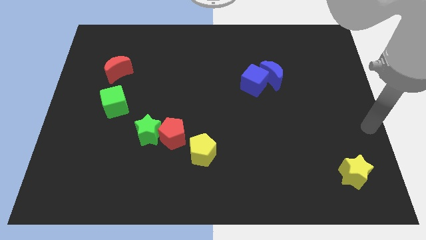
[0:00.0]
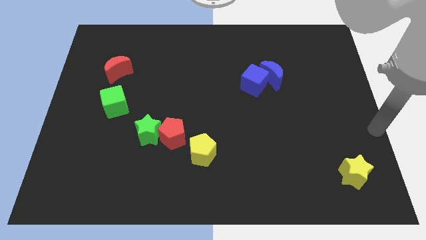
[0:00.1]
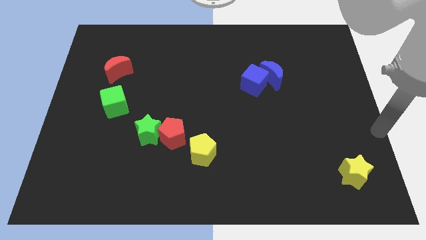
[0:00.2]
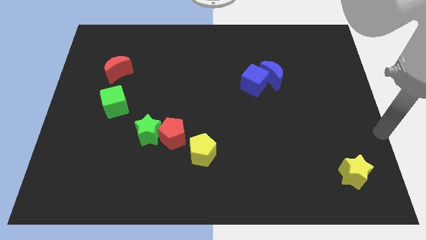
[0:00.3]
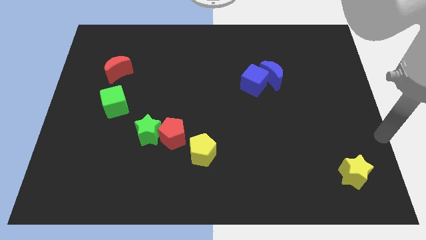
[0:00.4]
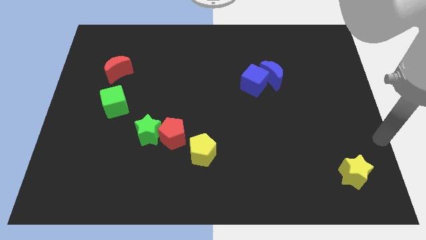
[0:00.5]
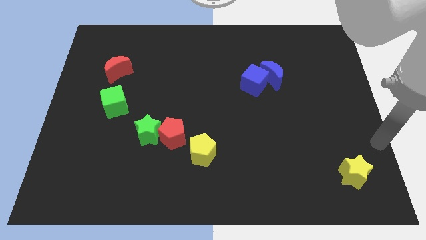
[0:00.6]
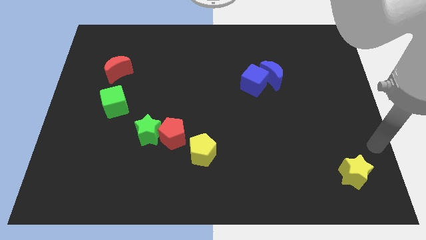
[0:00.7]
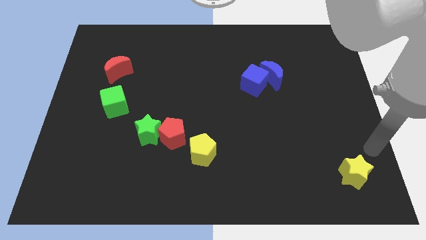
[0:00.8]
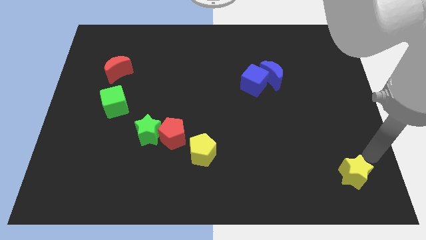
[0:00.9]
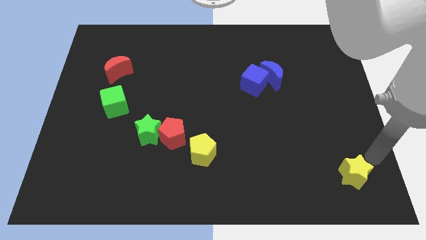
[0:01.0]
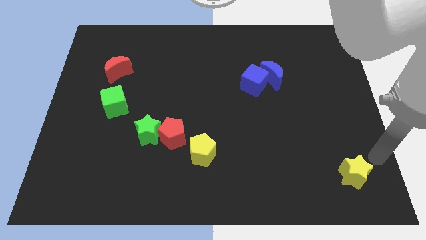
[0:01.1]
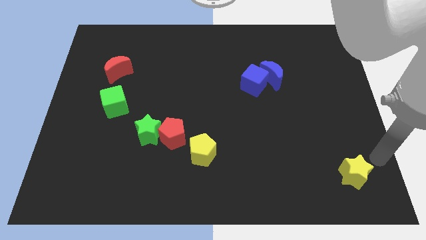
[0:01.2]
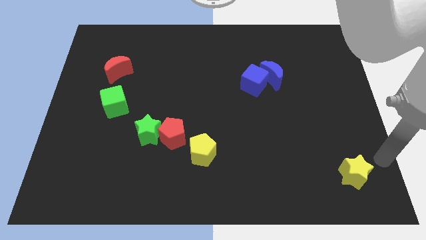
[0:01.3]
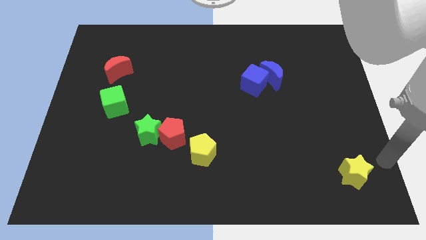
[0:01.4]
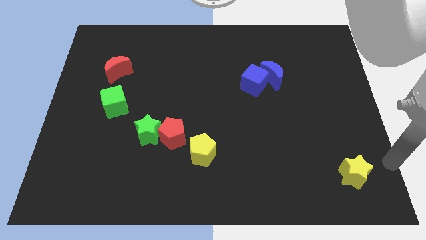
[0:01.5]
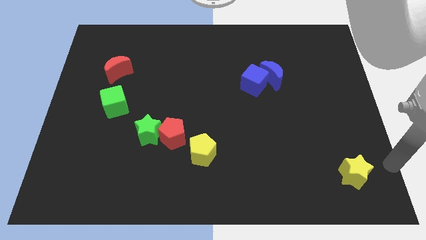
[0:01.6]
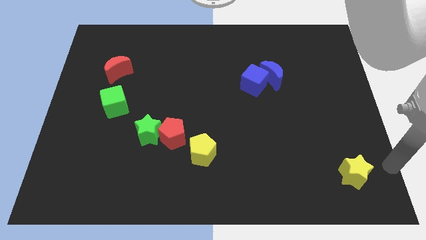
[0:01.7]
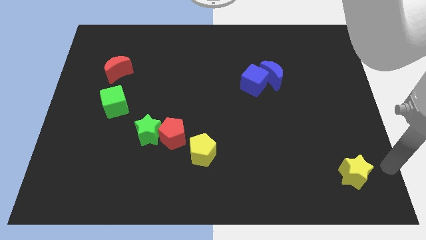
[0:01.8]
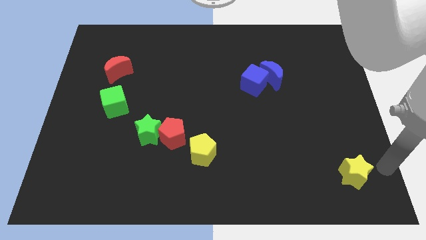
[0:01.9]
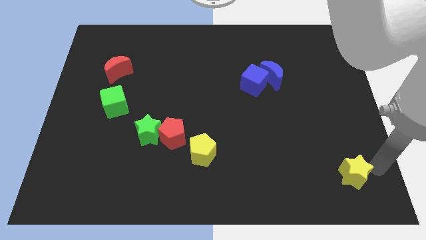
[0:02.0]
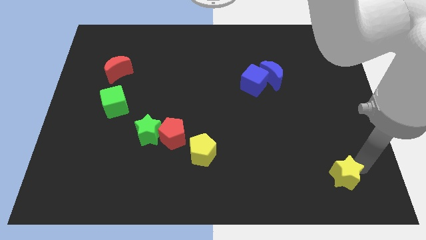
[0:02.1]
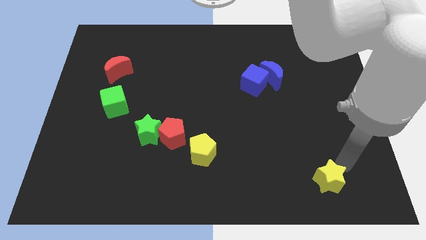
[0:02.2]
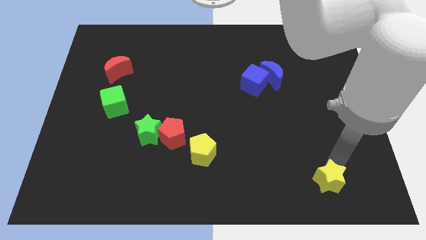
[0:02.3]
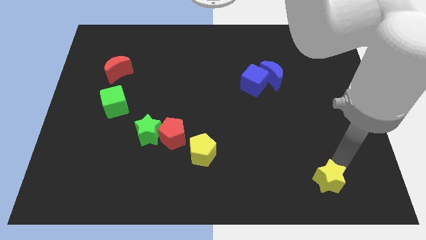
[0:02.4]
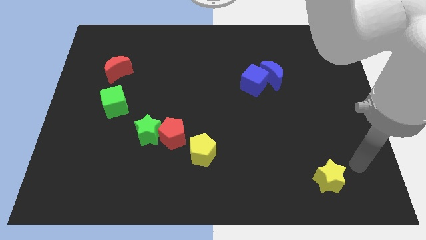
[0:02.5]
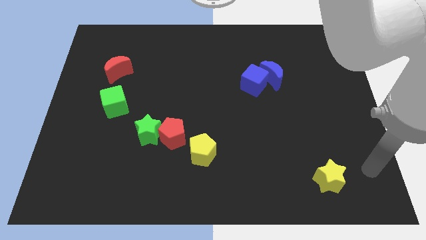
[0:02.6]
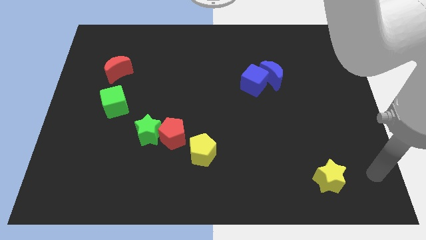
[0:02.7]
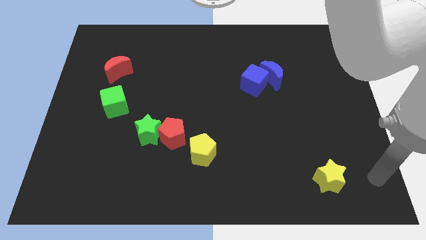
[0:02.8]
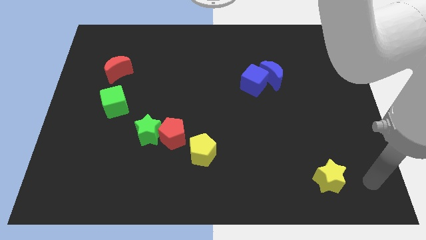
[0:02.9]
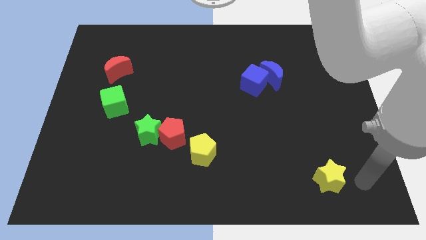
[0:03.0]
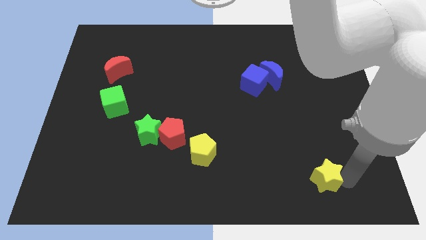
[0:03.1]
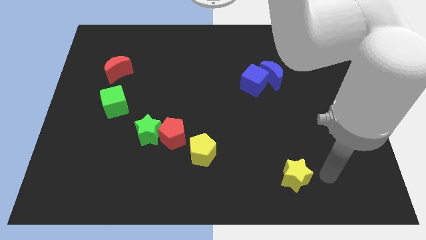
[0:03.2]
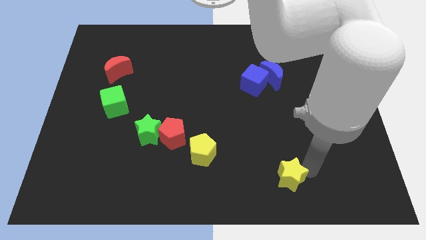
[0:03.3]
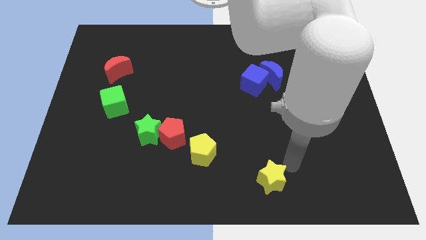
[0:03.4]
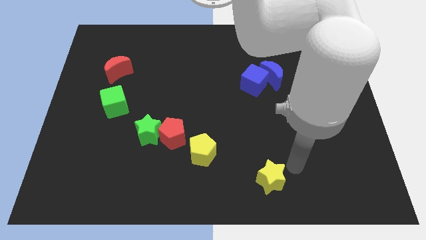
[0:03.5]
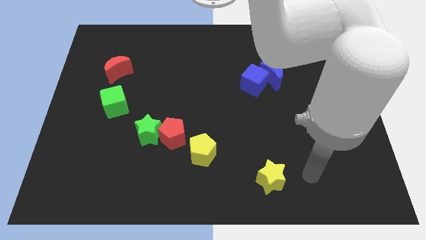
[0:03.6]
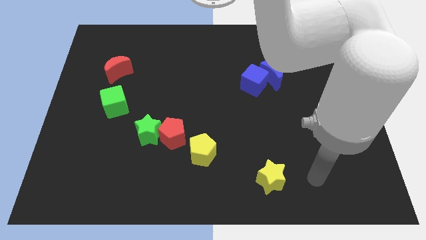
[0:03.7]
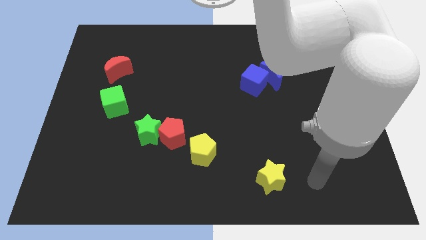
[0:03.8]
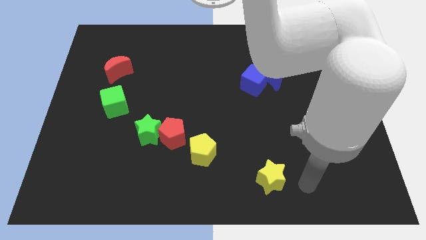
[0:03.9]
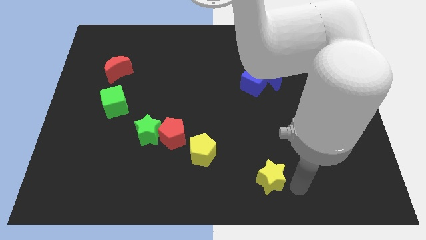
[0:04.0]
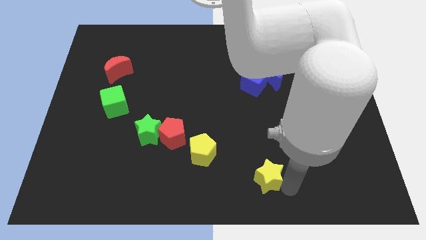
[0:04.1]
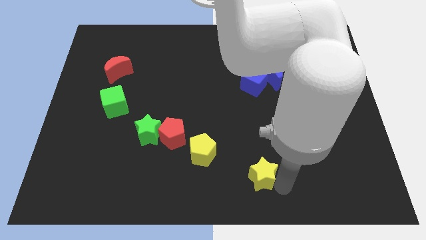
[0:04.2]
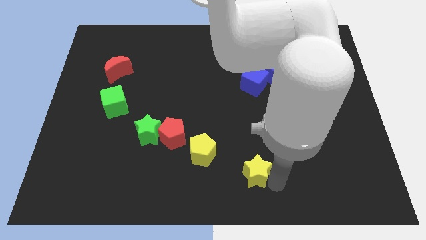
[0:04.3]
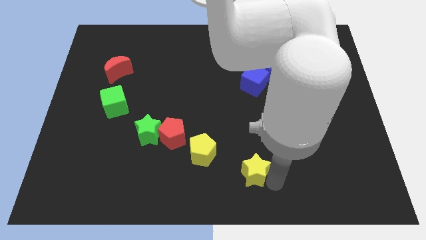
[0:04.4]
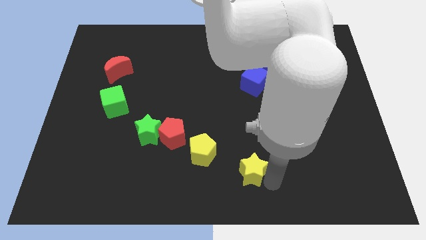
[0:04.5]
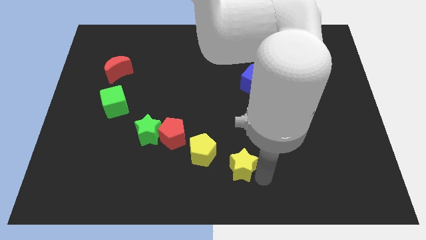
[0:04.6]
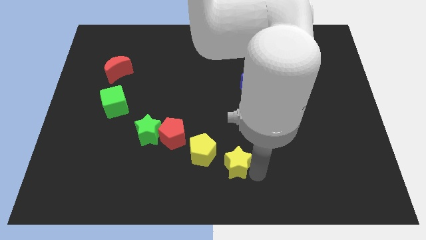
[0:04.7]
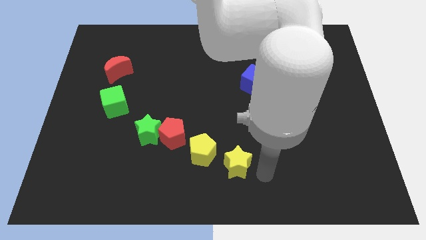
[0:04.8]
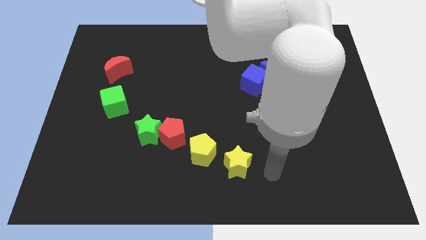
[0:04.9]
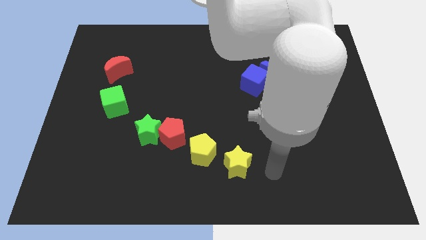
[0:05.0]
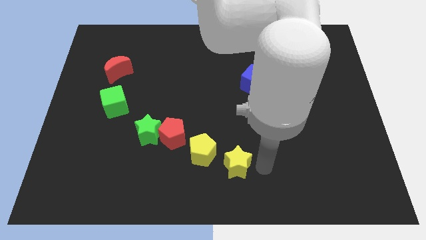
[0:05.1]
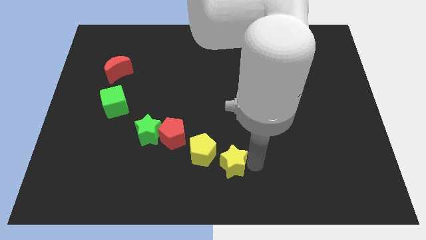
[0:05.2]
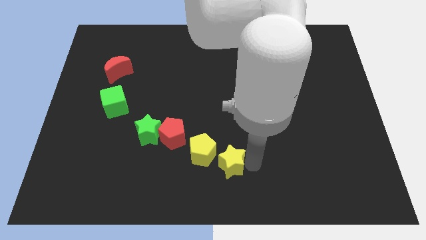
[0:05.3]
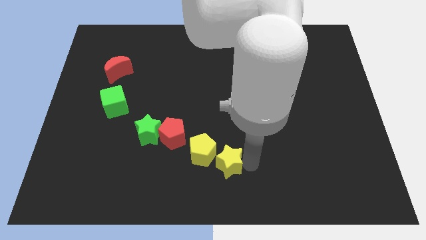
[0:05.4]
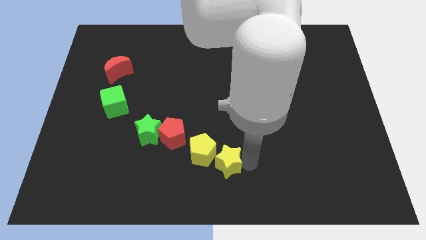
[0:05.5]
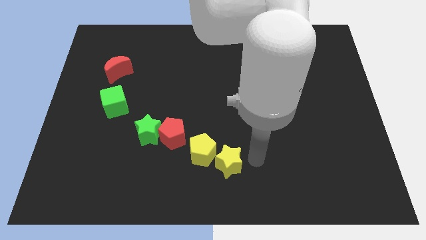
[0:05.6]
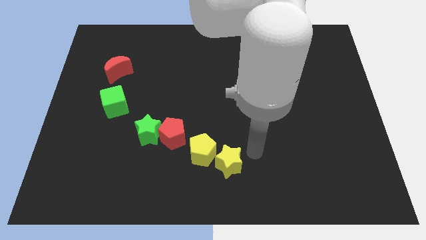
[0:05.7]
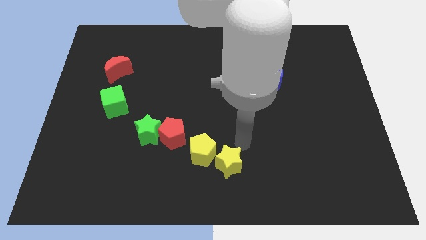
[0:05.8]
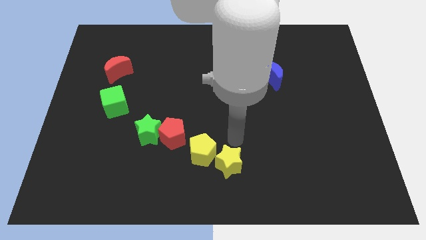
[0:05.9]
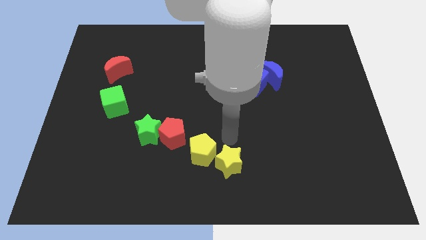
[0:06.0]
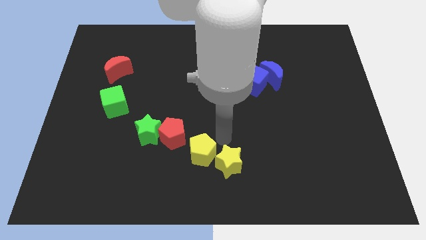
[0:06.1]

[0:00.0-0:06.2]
move the yellow star towards the left of the yellow pentagon

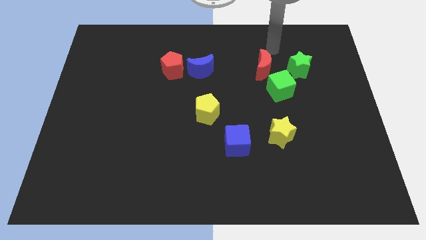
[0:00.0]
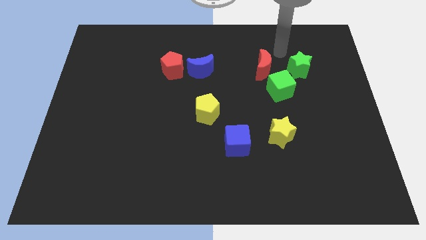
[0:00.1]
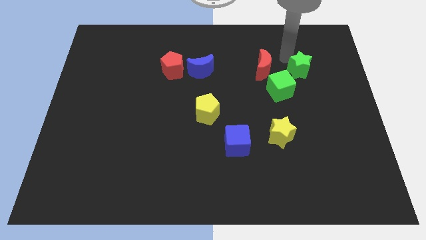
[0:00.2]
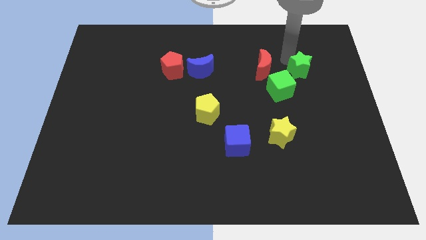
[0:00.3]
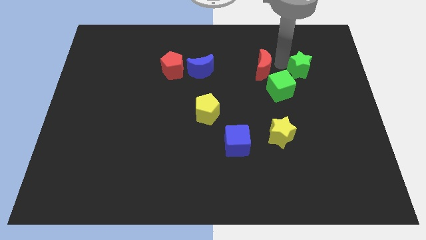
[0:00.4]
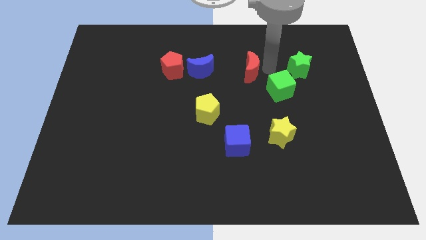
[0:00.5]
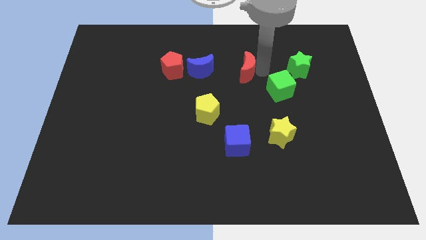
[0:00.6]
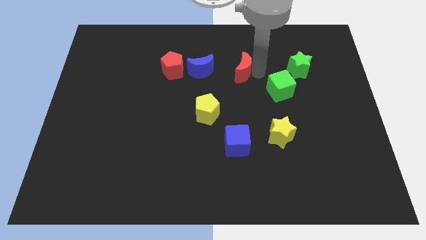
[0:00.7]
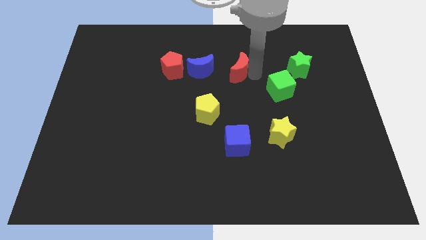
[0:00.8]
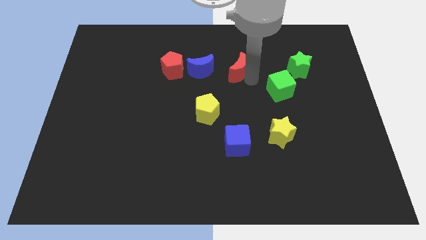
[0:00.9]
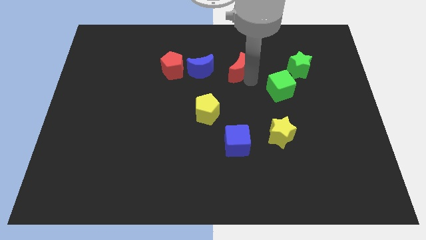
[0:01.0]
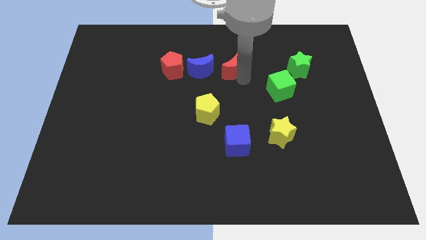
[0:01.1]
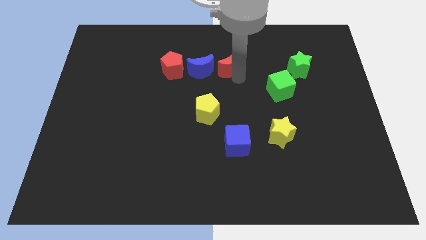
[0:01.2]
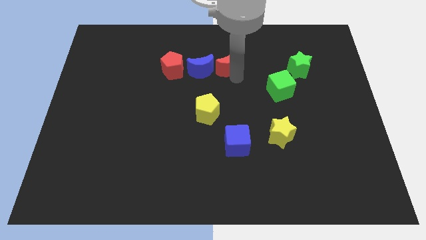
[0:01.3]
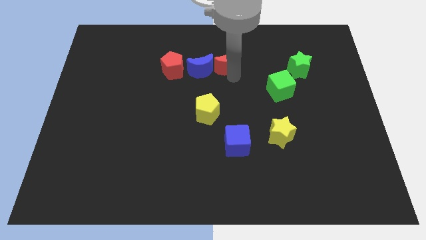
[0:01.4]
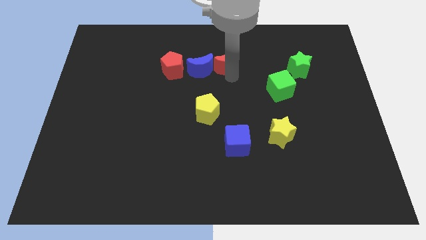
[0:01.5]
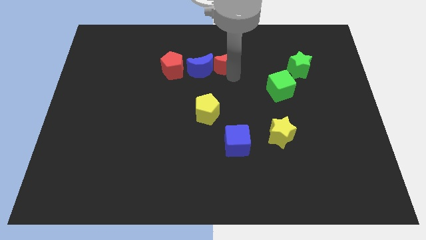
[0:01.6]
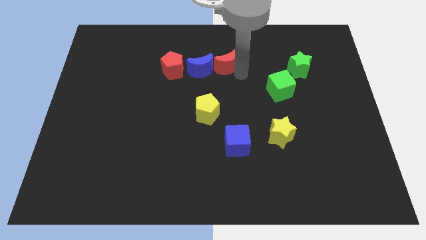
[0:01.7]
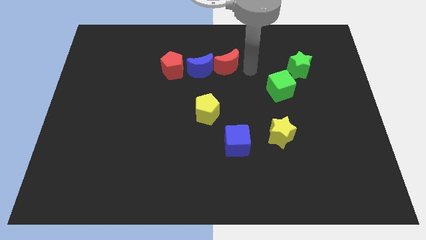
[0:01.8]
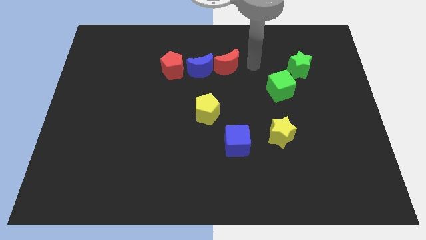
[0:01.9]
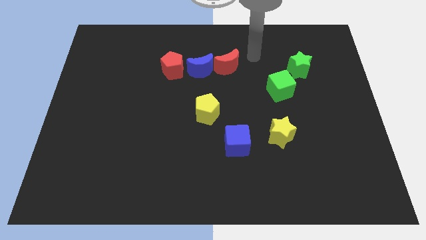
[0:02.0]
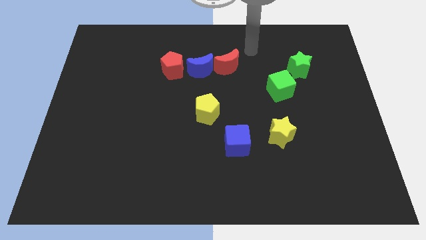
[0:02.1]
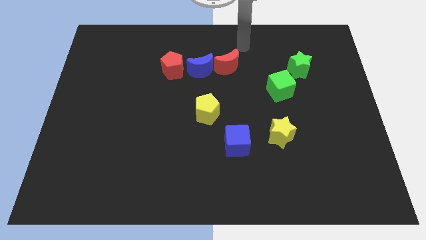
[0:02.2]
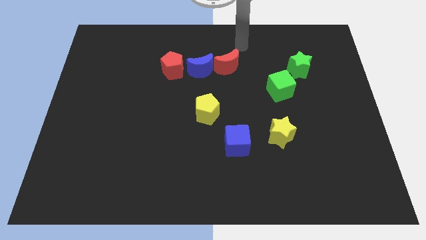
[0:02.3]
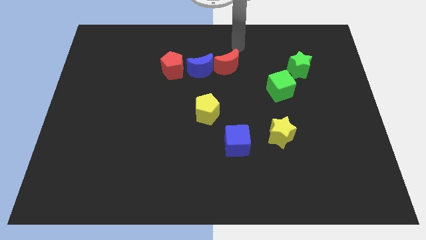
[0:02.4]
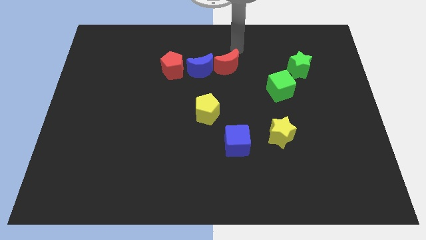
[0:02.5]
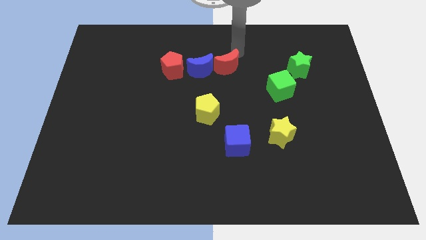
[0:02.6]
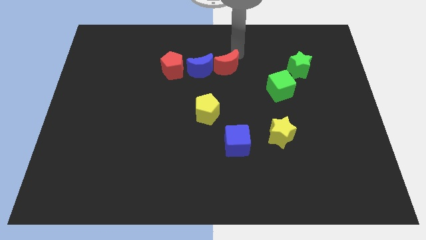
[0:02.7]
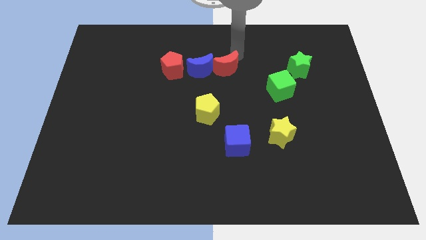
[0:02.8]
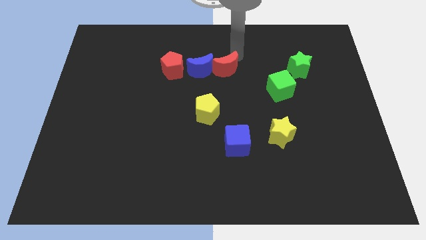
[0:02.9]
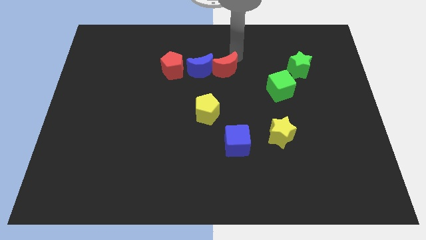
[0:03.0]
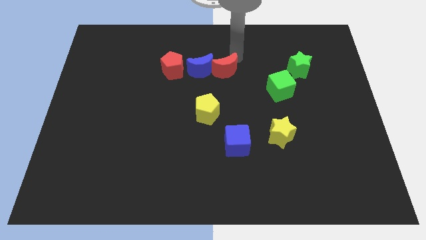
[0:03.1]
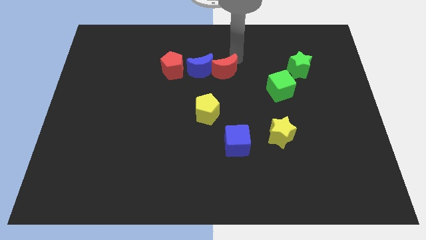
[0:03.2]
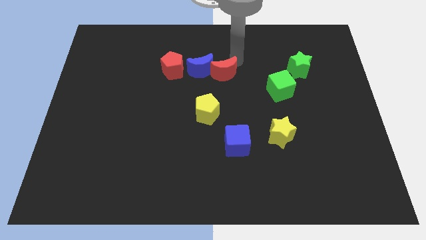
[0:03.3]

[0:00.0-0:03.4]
push the red crescent to the right of the blue crescent
